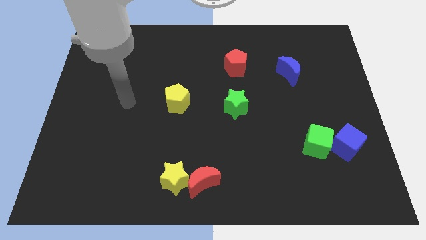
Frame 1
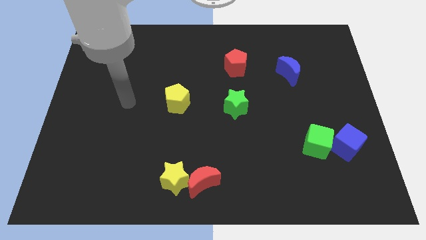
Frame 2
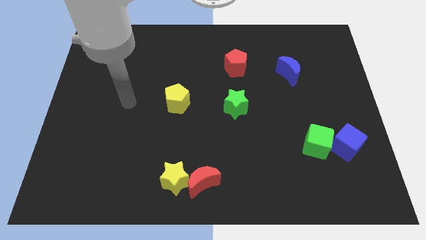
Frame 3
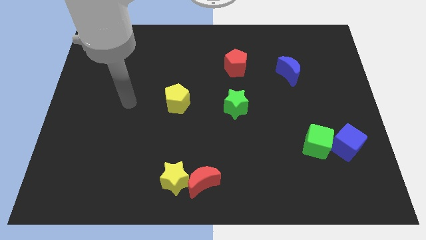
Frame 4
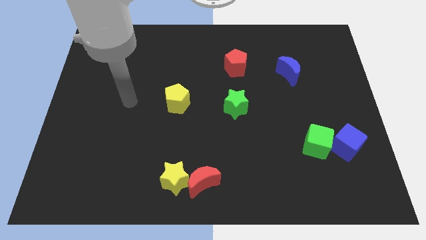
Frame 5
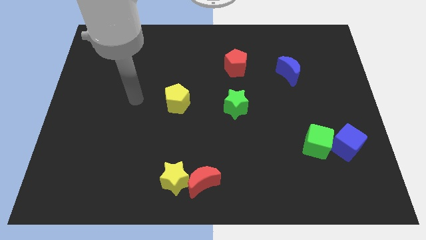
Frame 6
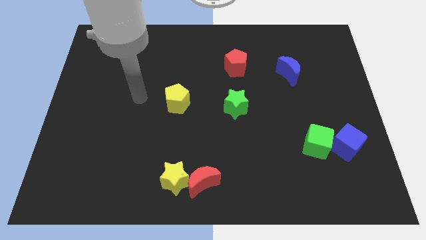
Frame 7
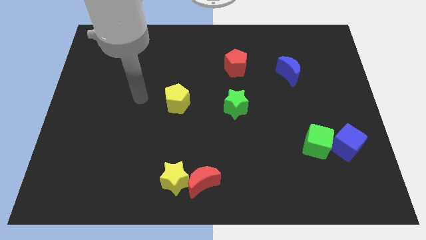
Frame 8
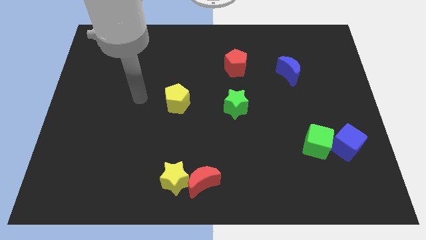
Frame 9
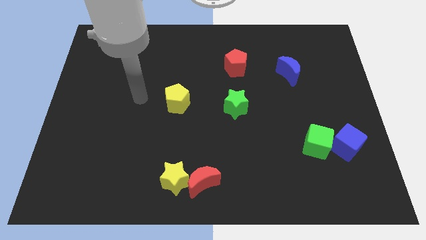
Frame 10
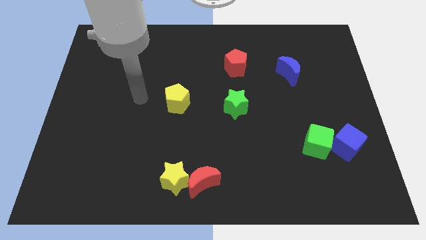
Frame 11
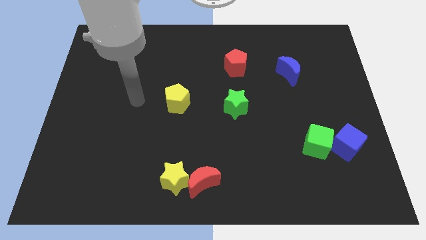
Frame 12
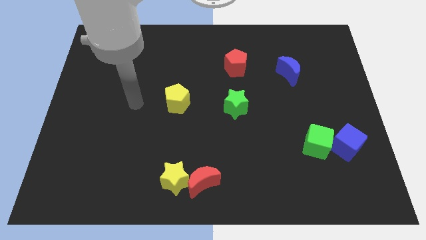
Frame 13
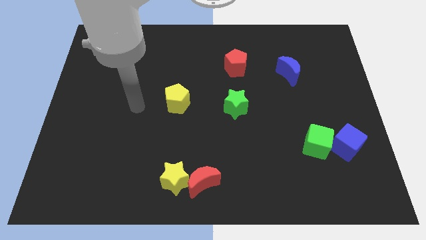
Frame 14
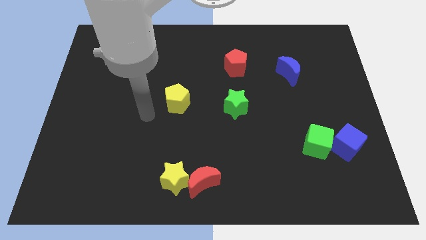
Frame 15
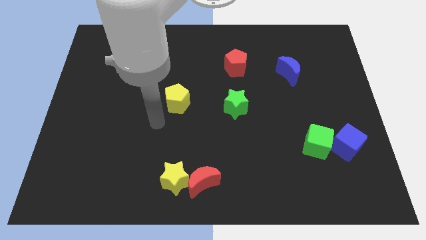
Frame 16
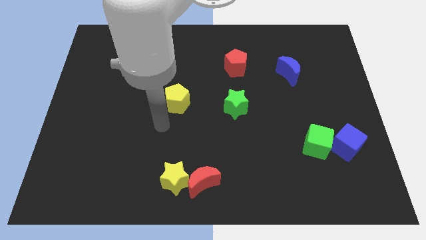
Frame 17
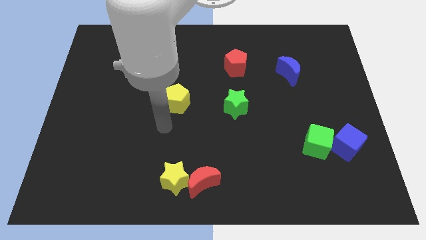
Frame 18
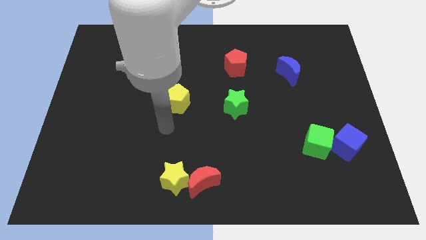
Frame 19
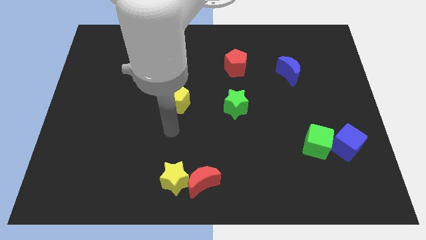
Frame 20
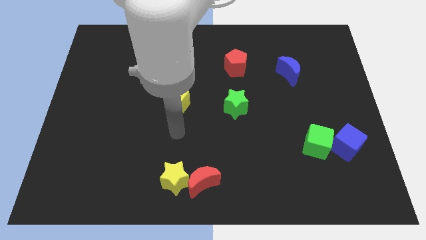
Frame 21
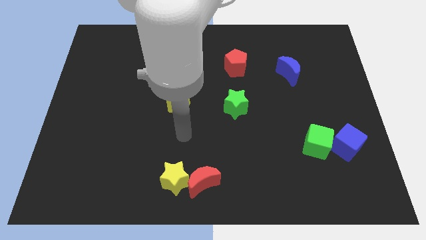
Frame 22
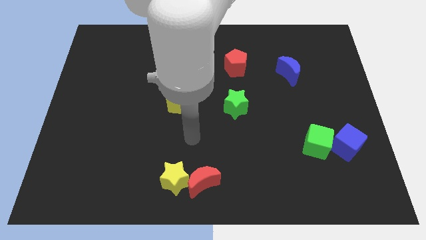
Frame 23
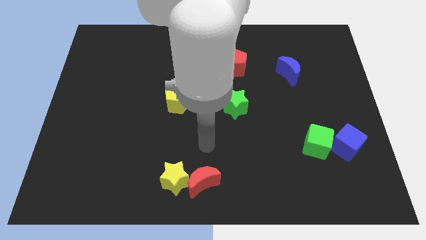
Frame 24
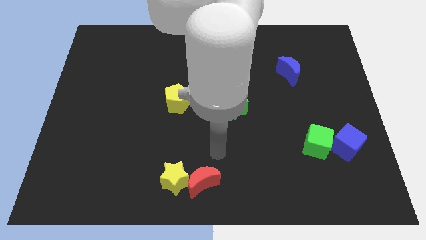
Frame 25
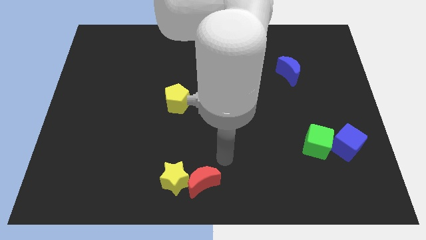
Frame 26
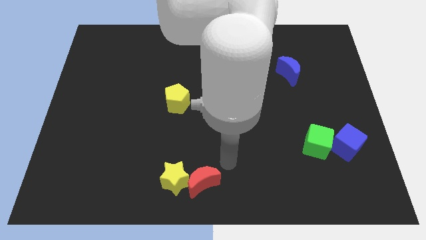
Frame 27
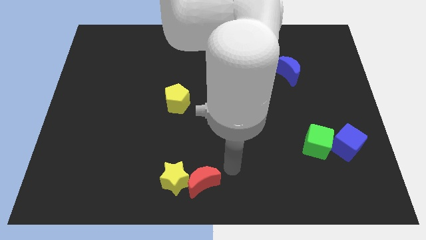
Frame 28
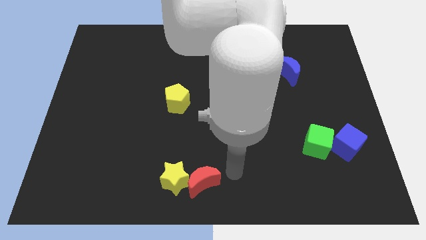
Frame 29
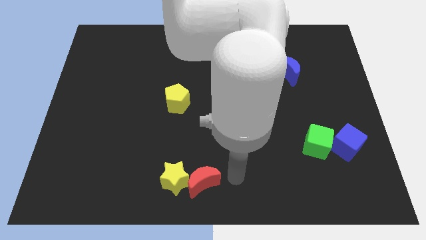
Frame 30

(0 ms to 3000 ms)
move your arm to the right of the red crescent

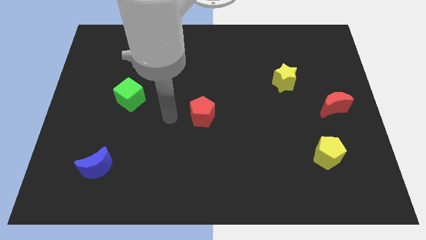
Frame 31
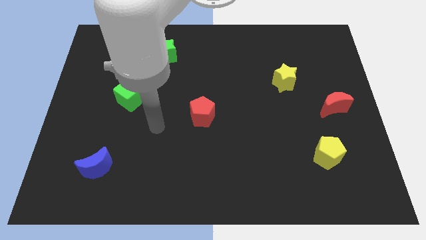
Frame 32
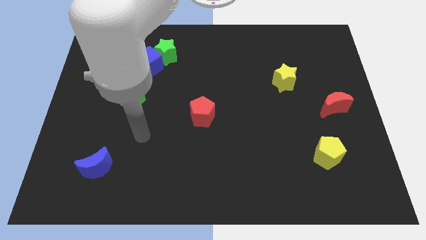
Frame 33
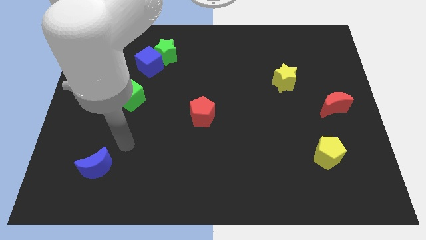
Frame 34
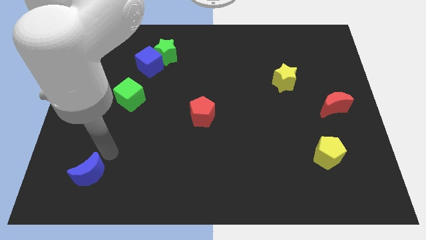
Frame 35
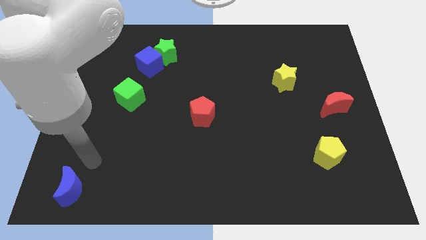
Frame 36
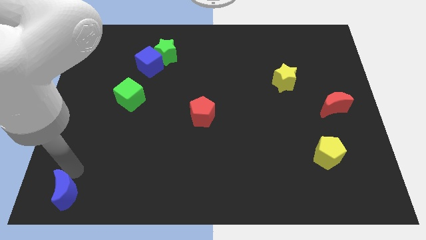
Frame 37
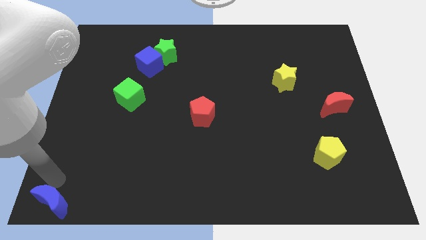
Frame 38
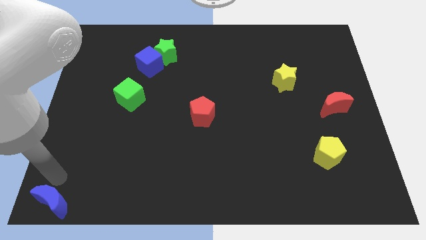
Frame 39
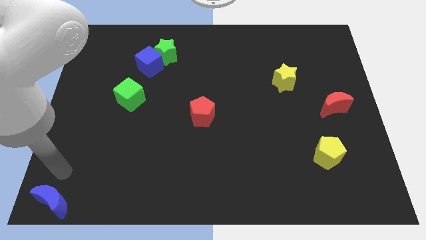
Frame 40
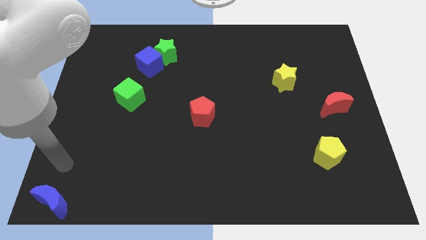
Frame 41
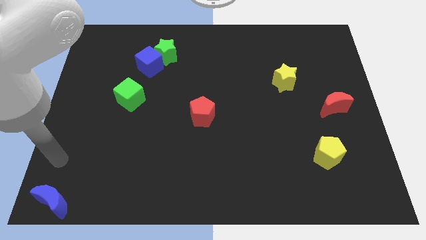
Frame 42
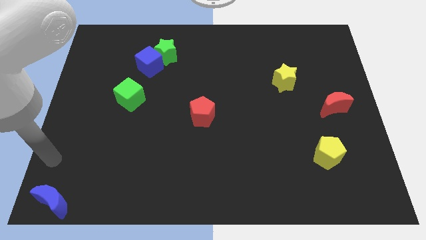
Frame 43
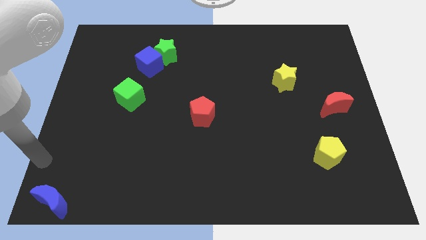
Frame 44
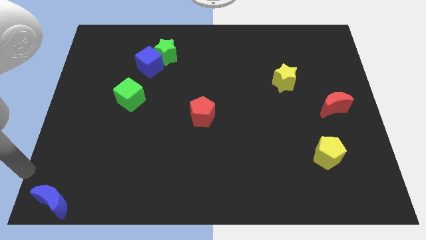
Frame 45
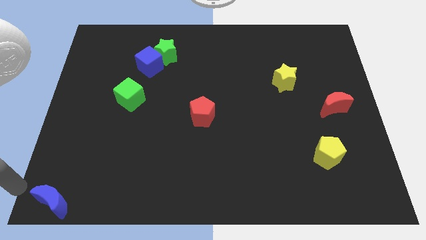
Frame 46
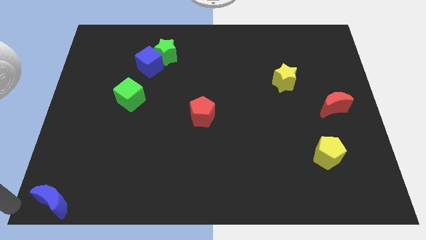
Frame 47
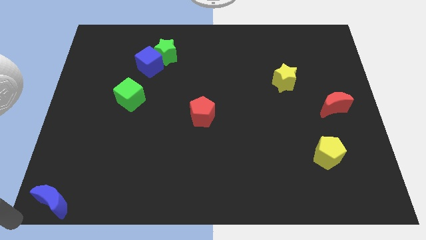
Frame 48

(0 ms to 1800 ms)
slide the blue moon to the bottom left

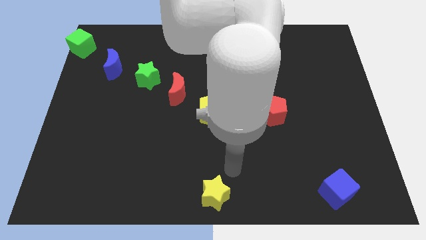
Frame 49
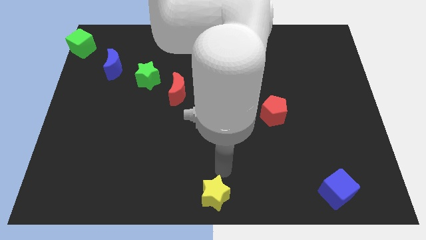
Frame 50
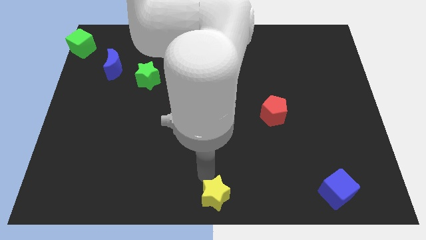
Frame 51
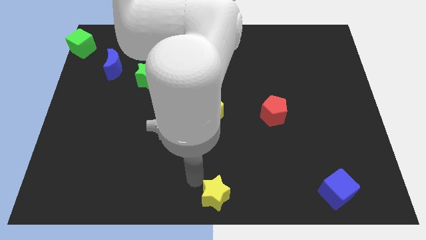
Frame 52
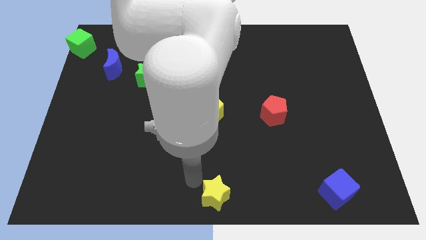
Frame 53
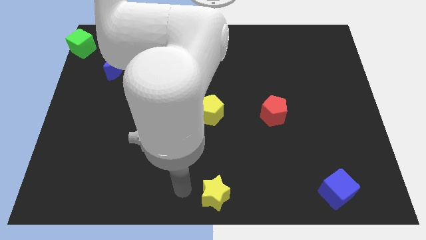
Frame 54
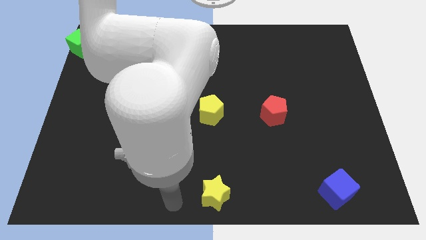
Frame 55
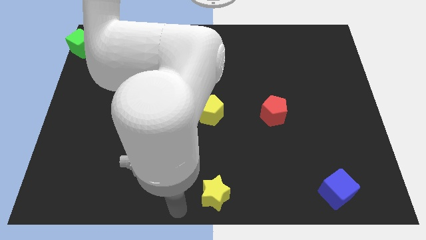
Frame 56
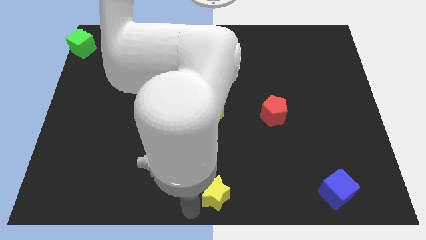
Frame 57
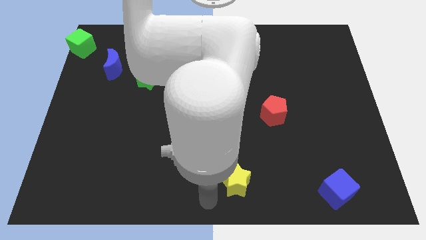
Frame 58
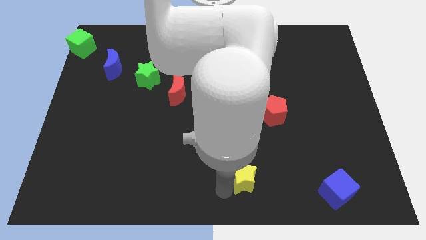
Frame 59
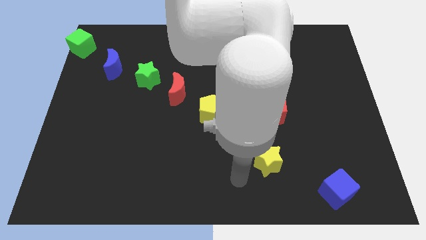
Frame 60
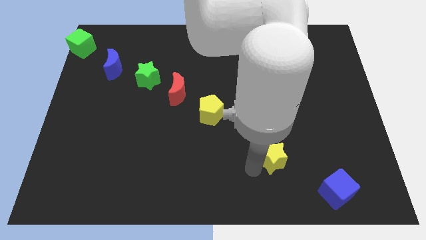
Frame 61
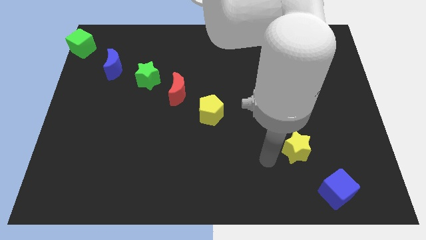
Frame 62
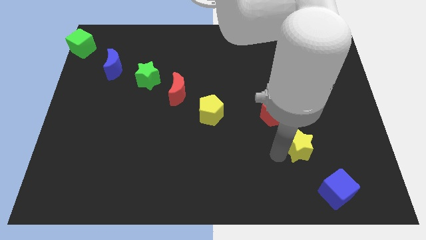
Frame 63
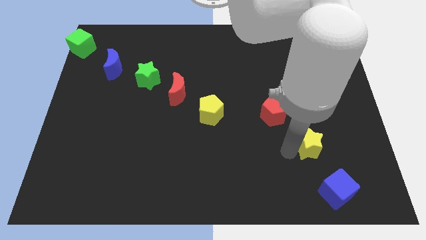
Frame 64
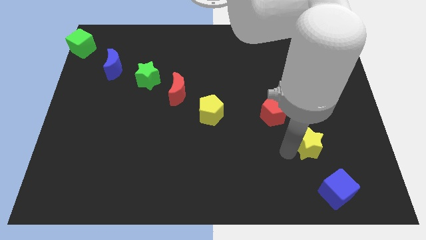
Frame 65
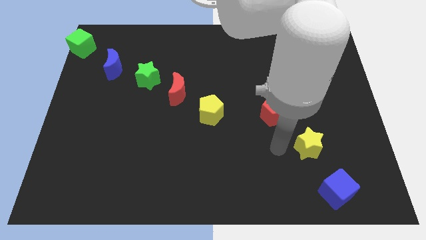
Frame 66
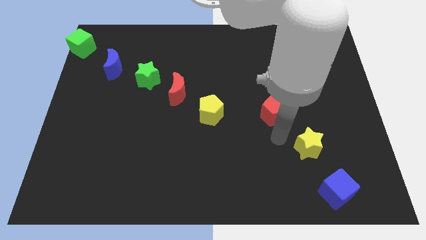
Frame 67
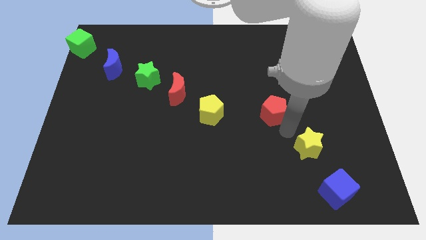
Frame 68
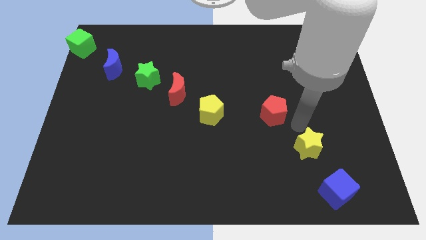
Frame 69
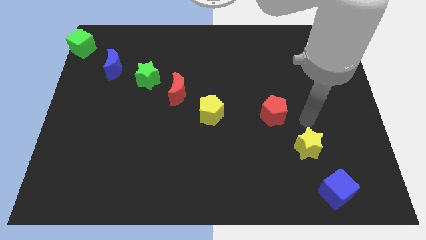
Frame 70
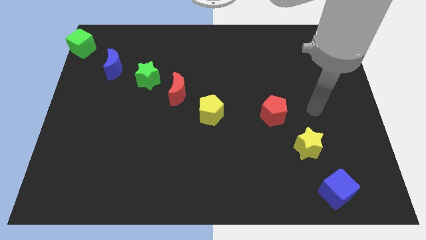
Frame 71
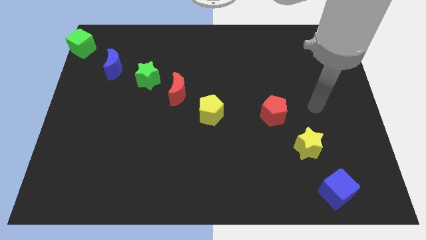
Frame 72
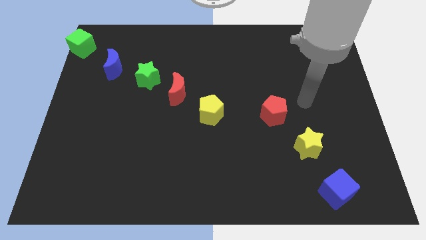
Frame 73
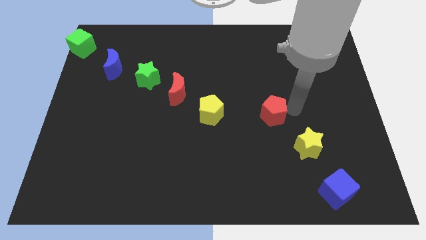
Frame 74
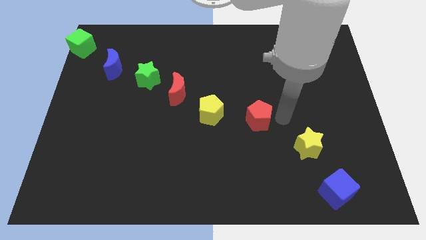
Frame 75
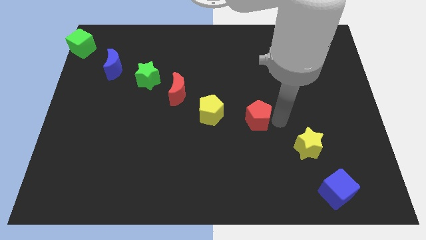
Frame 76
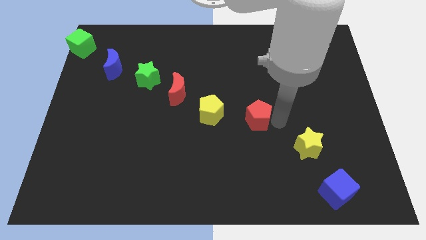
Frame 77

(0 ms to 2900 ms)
place the yellow pentago below the red pentagon

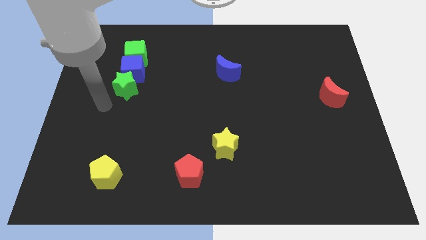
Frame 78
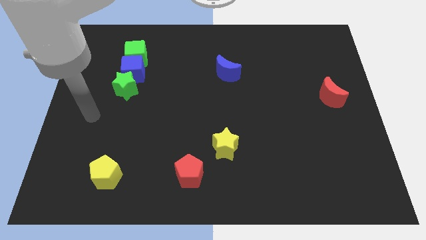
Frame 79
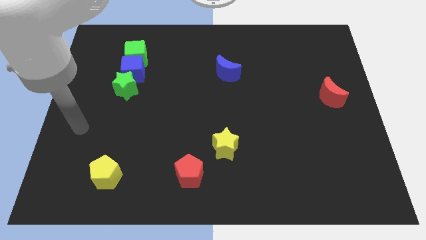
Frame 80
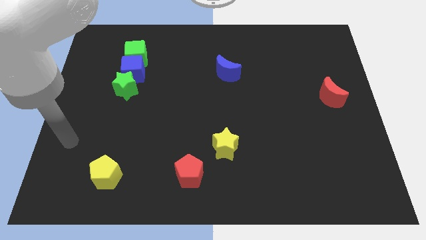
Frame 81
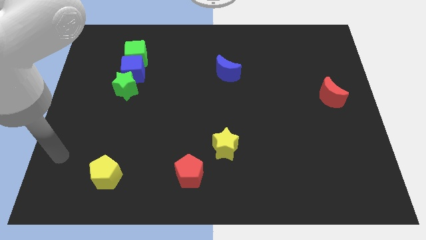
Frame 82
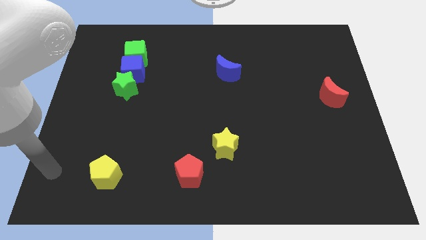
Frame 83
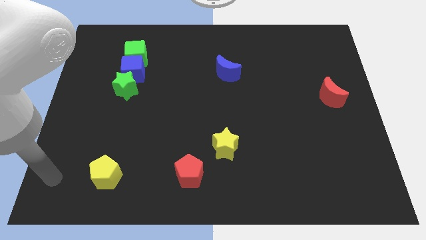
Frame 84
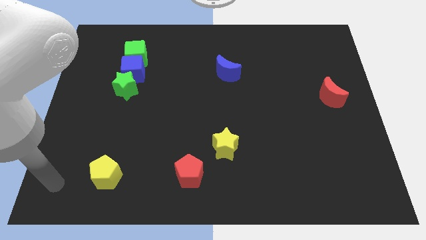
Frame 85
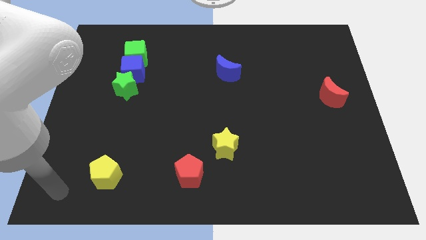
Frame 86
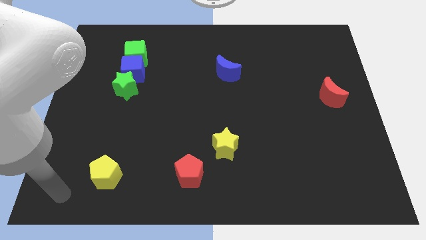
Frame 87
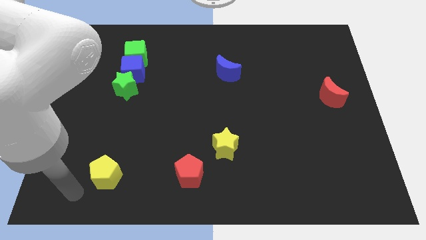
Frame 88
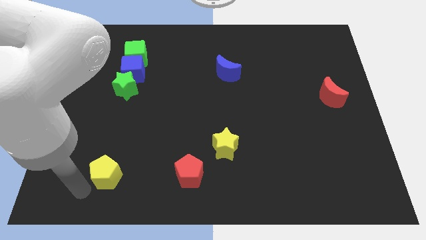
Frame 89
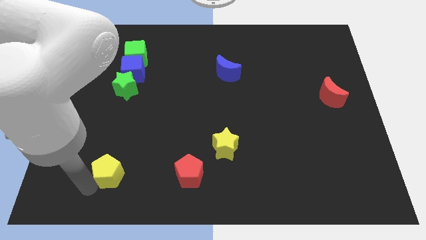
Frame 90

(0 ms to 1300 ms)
point the arm at the bottom left of the yellow pentagon
